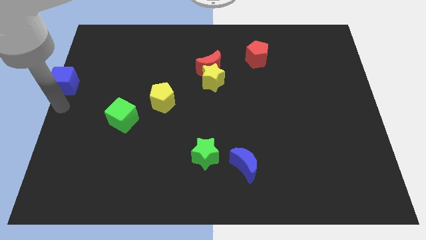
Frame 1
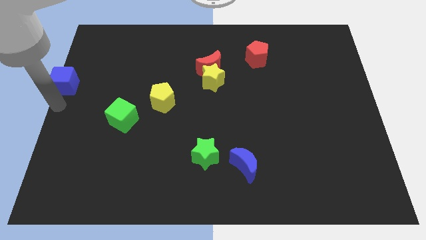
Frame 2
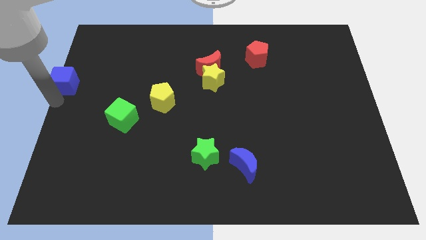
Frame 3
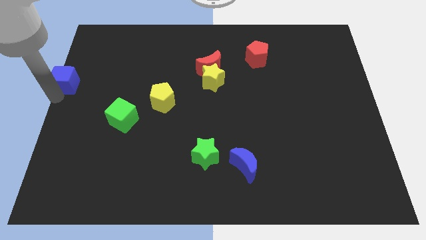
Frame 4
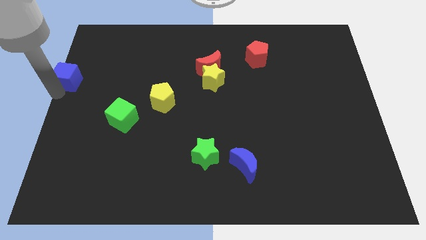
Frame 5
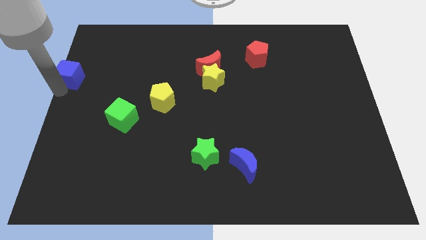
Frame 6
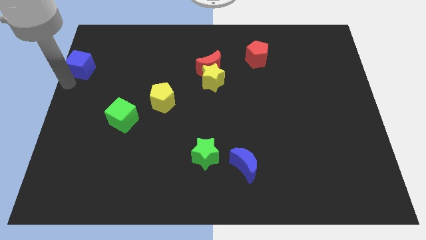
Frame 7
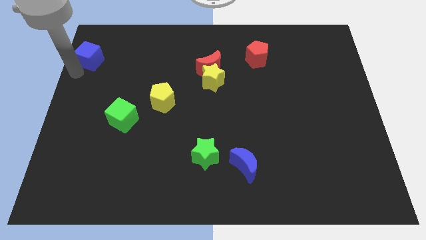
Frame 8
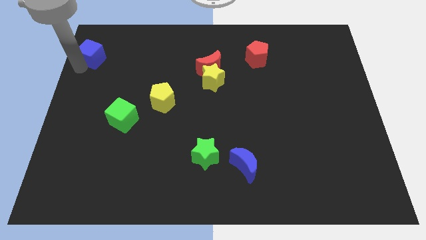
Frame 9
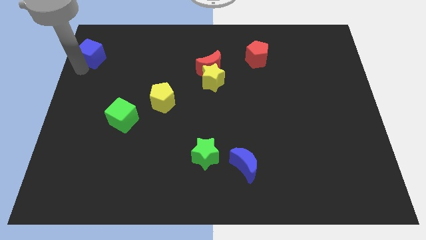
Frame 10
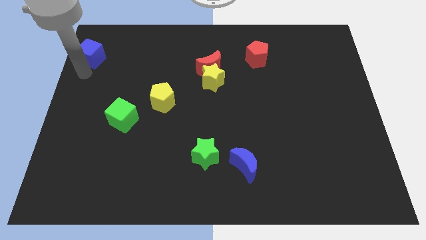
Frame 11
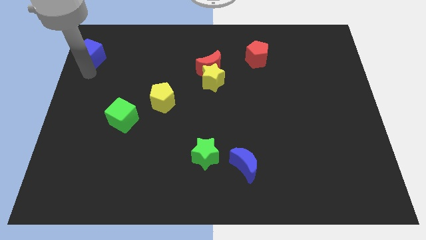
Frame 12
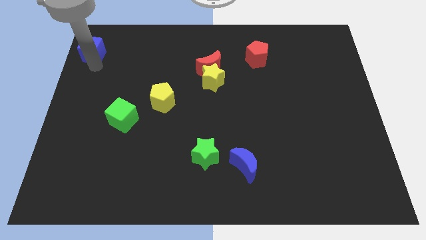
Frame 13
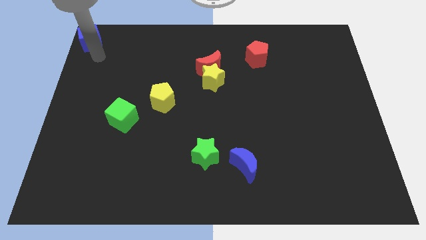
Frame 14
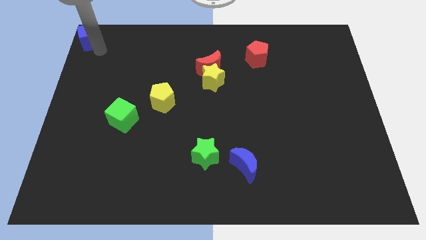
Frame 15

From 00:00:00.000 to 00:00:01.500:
move the blue cube towards the top left

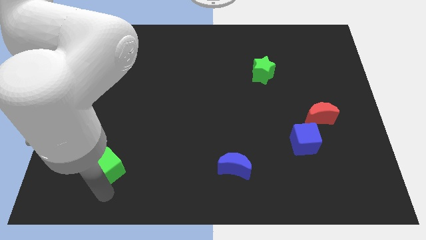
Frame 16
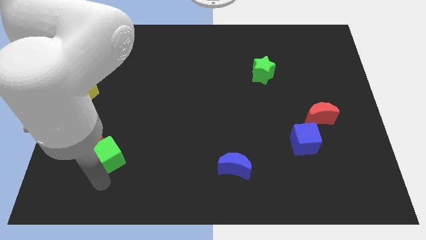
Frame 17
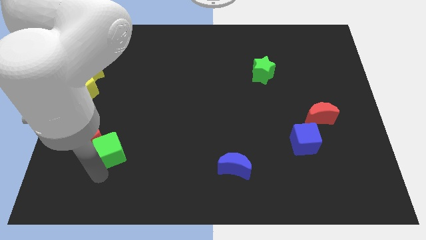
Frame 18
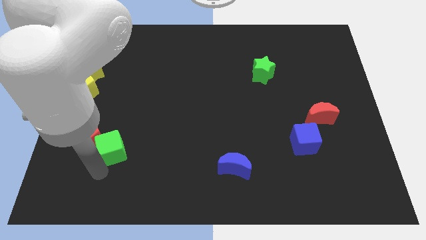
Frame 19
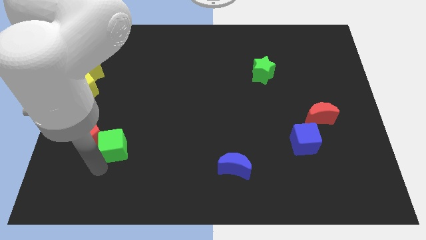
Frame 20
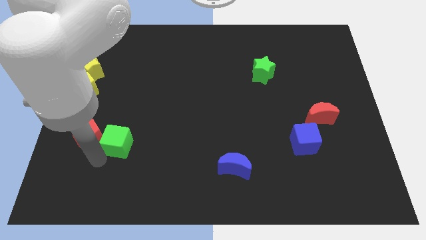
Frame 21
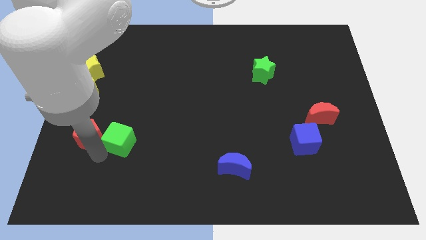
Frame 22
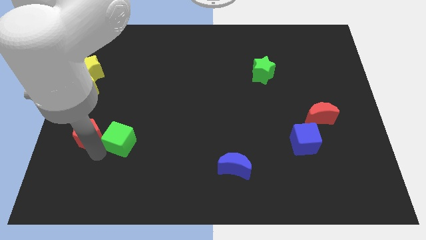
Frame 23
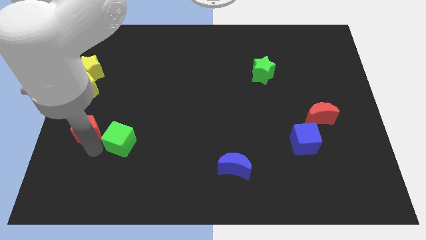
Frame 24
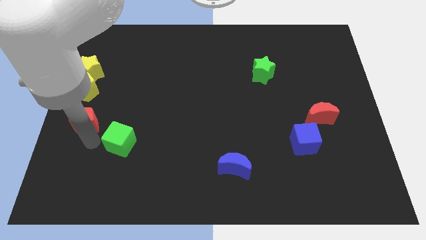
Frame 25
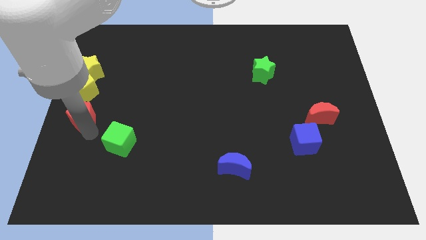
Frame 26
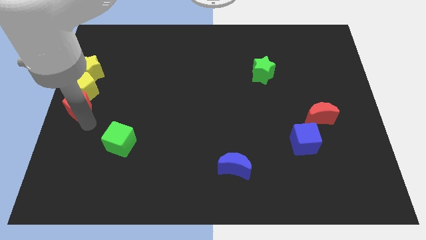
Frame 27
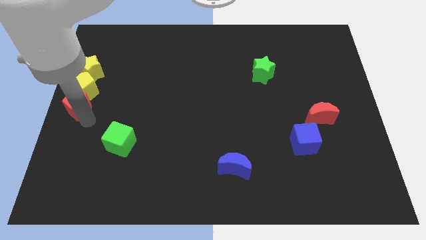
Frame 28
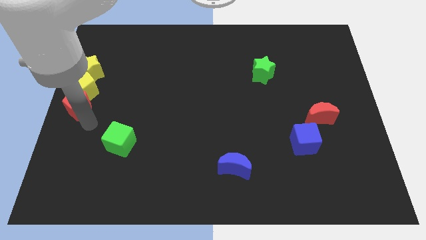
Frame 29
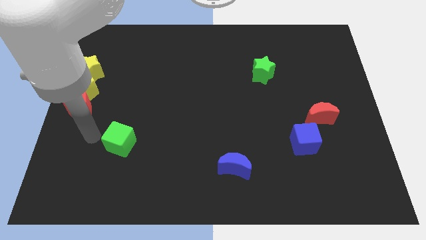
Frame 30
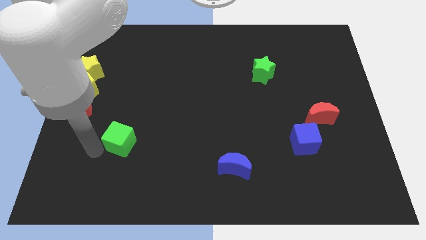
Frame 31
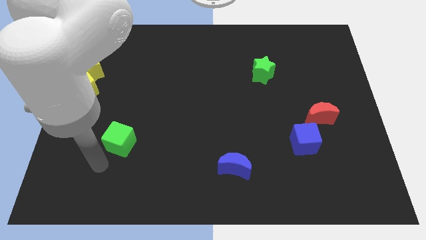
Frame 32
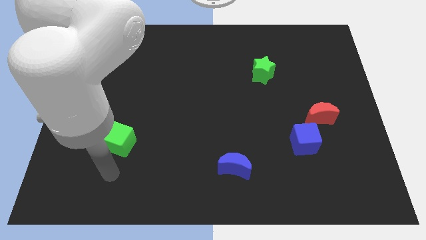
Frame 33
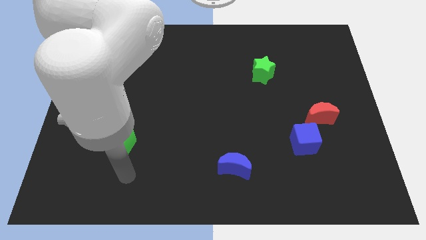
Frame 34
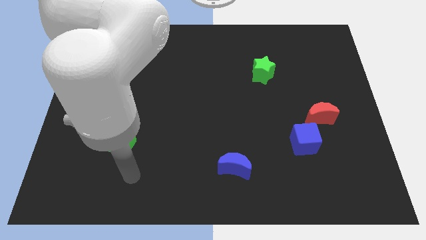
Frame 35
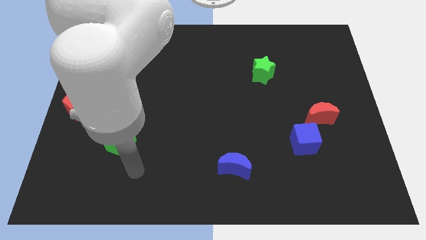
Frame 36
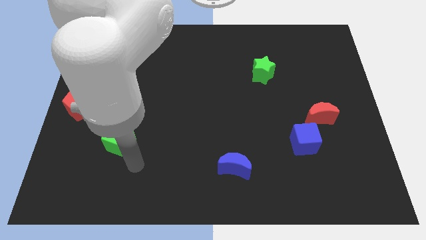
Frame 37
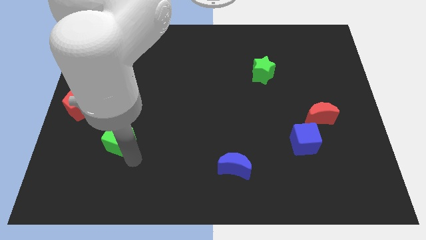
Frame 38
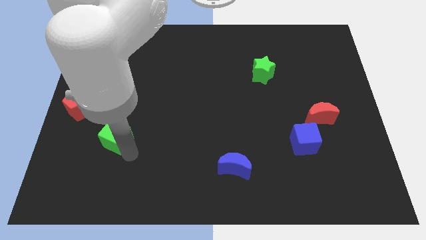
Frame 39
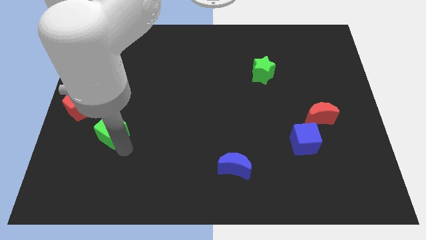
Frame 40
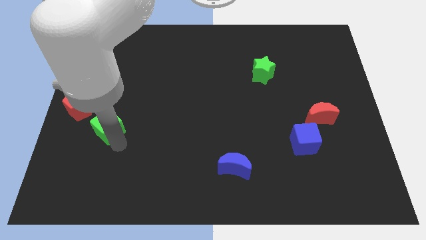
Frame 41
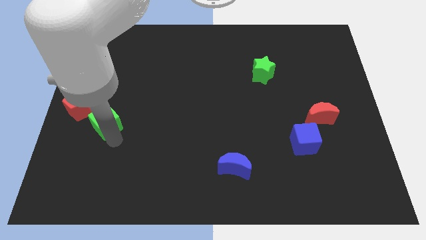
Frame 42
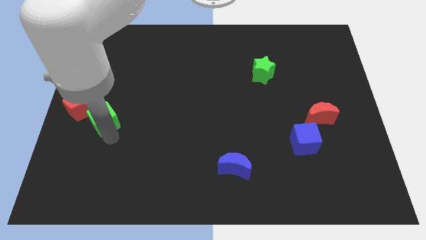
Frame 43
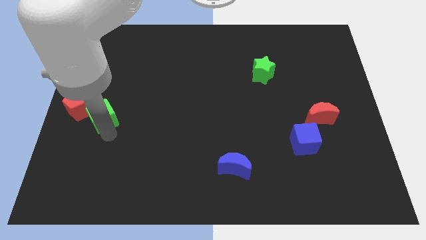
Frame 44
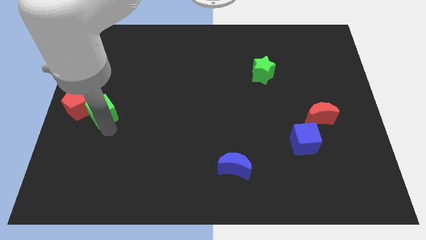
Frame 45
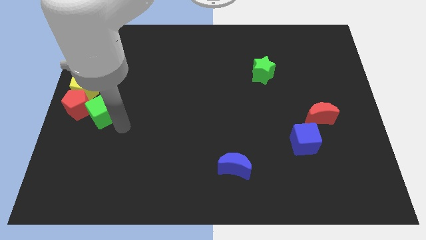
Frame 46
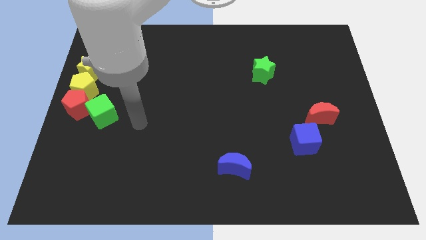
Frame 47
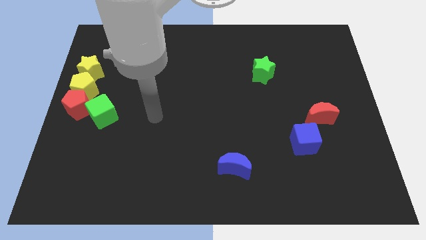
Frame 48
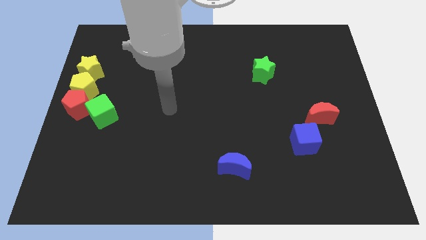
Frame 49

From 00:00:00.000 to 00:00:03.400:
push green cube and red pentagon in to yellow blocks

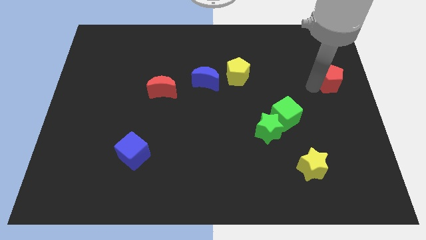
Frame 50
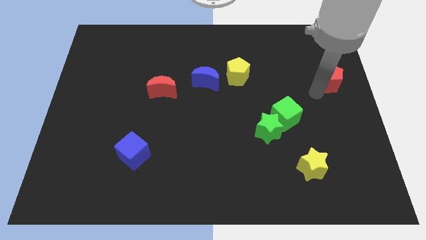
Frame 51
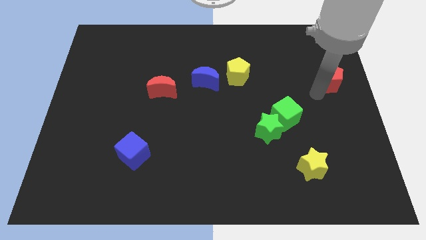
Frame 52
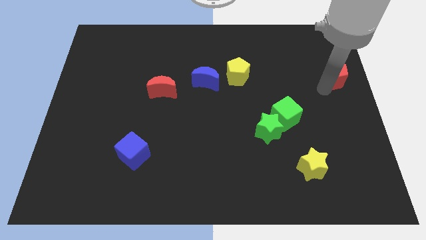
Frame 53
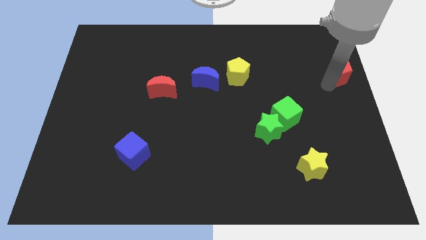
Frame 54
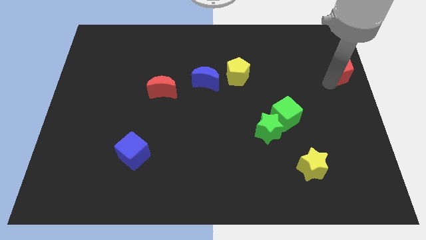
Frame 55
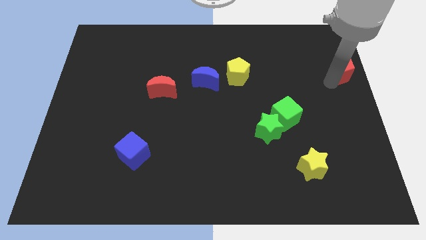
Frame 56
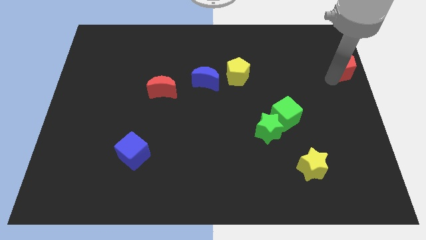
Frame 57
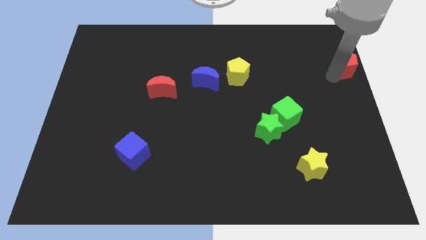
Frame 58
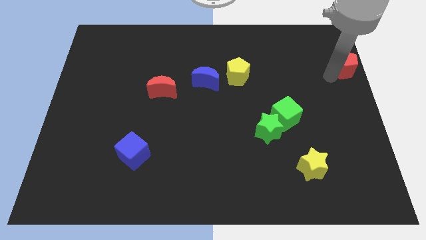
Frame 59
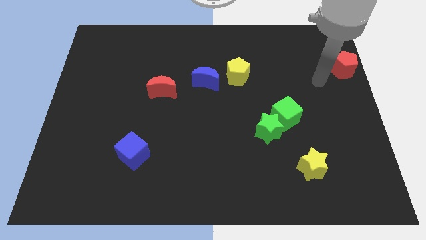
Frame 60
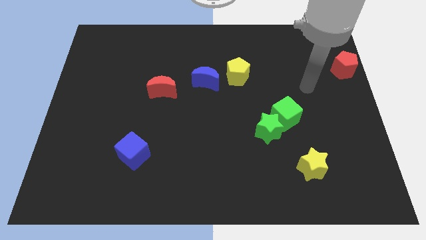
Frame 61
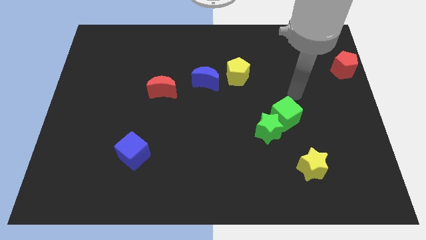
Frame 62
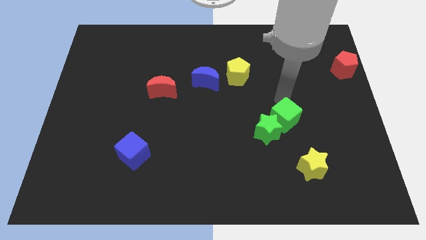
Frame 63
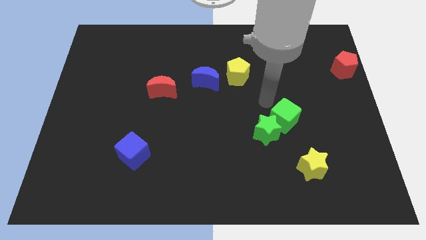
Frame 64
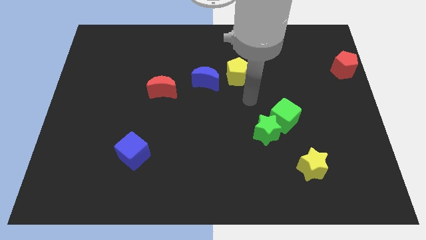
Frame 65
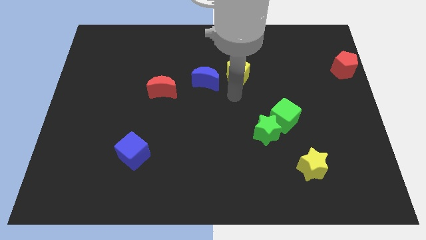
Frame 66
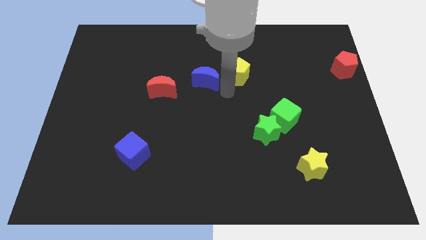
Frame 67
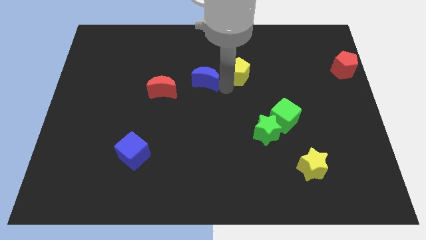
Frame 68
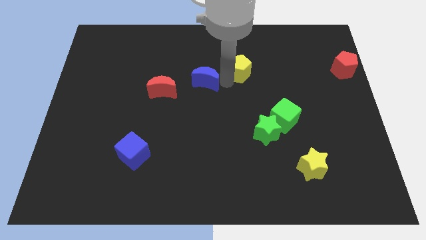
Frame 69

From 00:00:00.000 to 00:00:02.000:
push the red pentagon towards the top right corner of the board

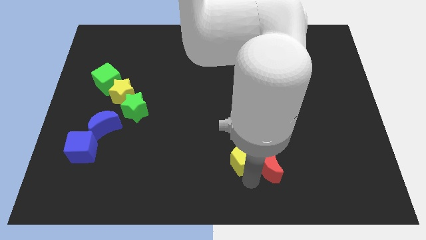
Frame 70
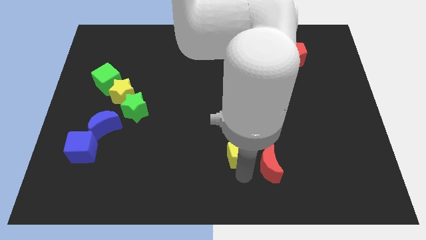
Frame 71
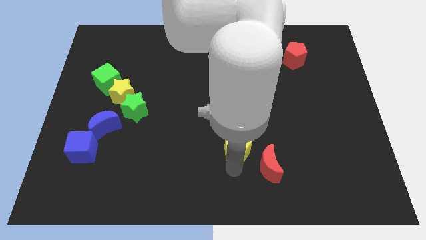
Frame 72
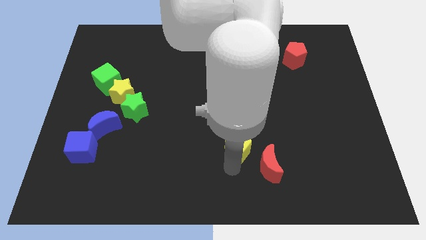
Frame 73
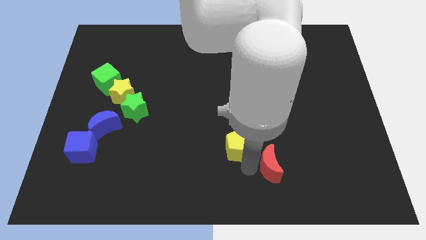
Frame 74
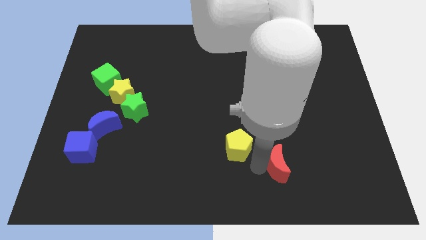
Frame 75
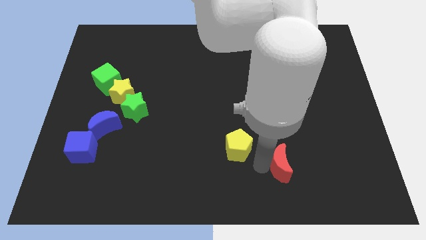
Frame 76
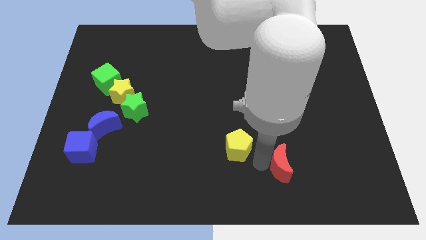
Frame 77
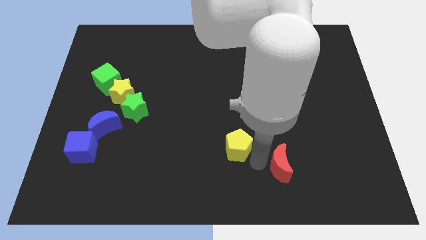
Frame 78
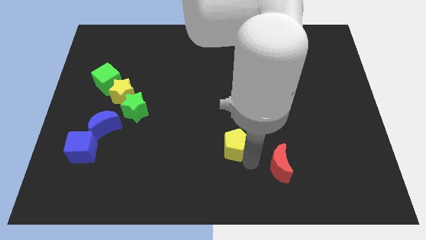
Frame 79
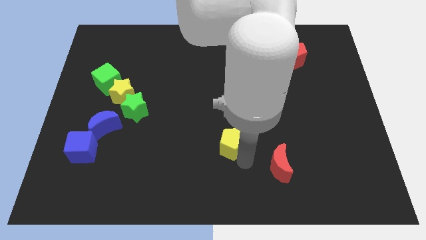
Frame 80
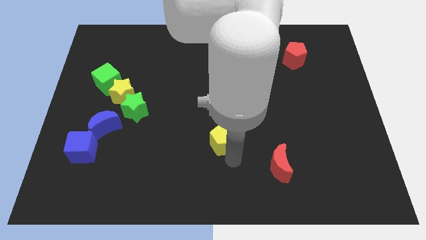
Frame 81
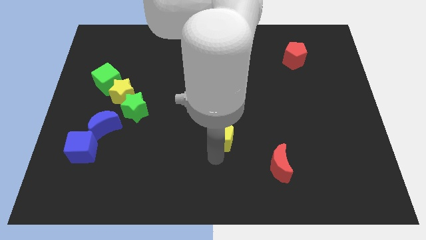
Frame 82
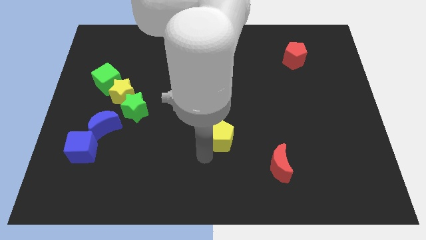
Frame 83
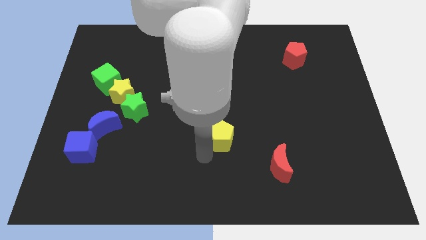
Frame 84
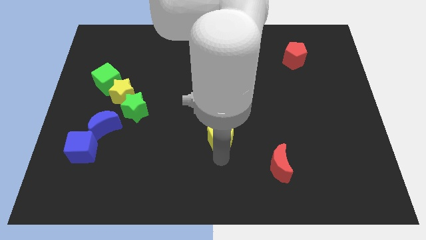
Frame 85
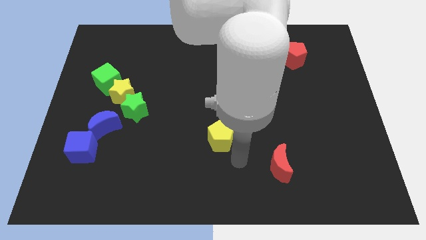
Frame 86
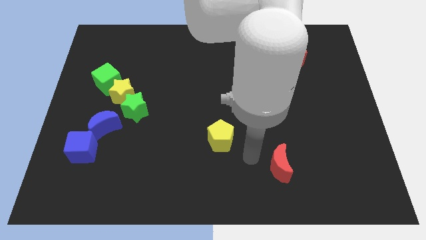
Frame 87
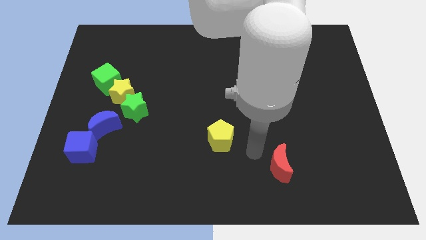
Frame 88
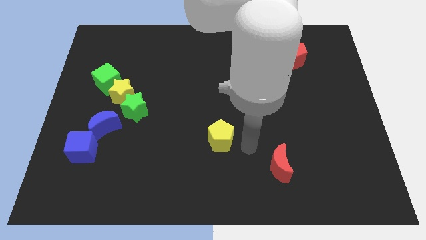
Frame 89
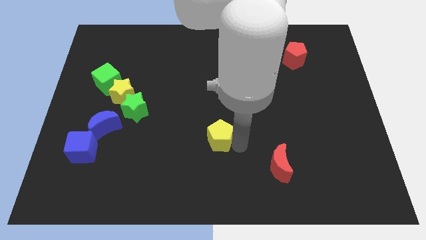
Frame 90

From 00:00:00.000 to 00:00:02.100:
separate yellow pentagon from red moon
